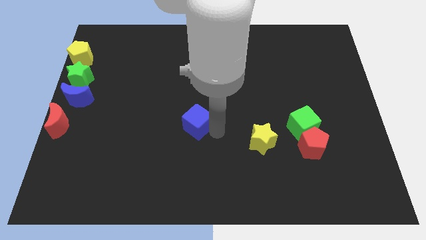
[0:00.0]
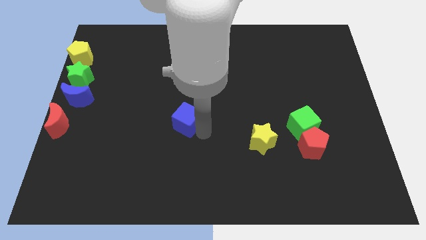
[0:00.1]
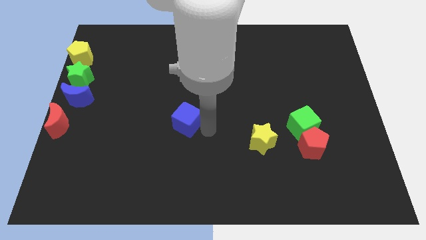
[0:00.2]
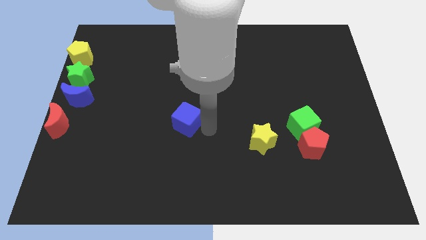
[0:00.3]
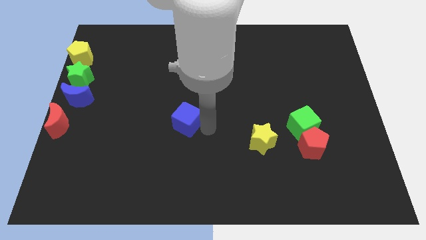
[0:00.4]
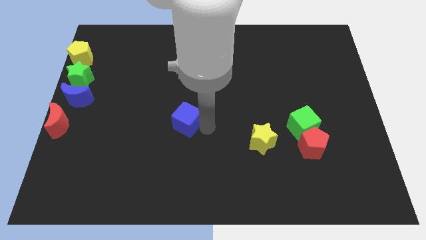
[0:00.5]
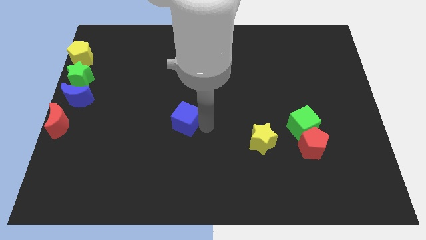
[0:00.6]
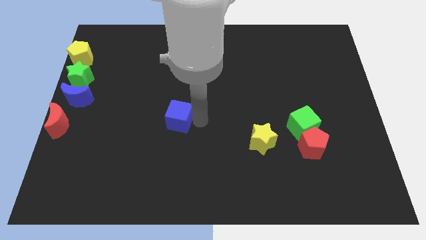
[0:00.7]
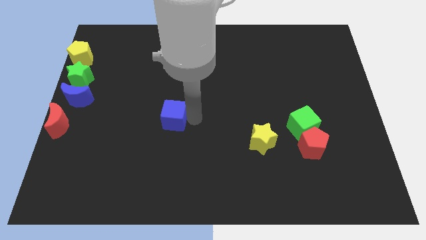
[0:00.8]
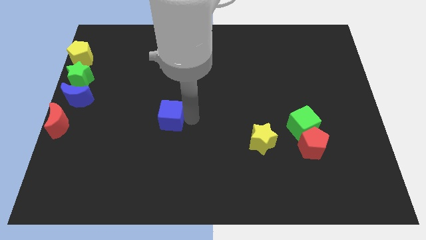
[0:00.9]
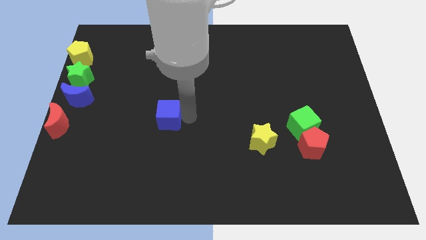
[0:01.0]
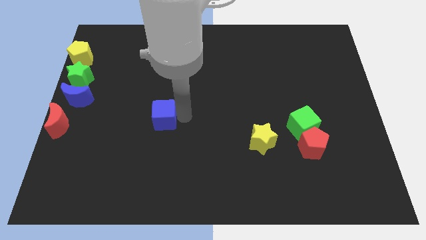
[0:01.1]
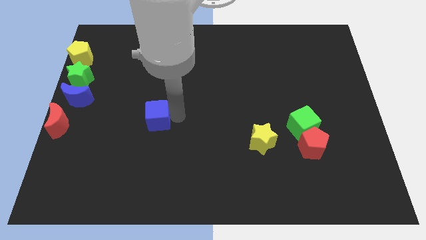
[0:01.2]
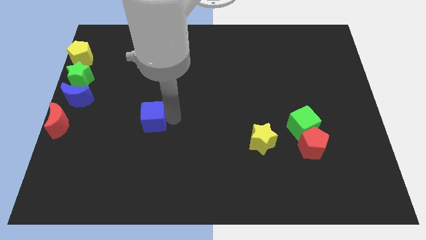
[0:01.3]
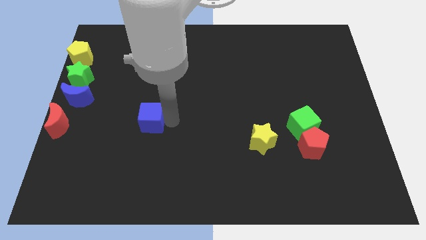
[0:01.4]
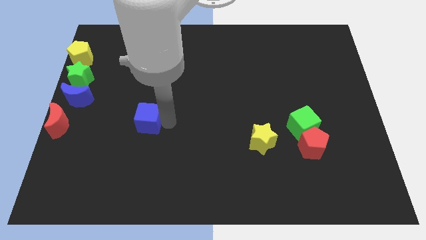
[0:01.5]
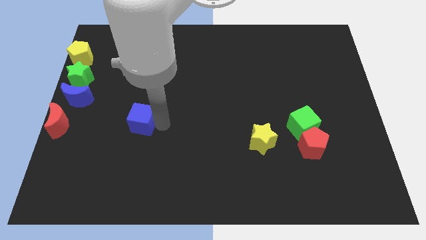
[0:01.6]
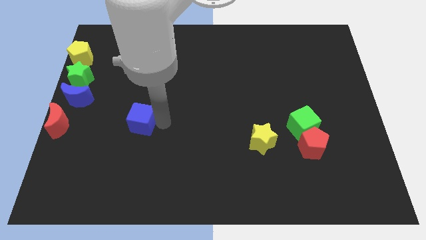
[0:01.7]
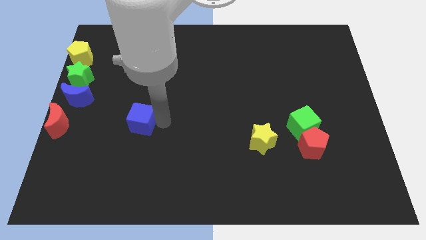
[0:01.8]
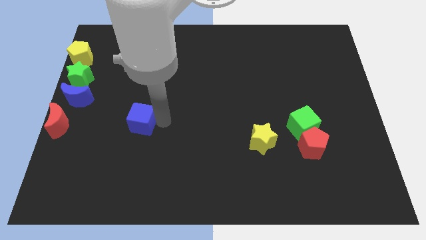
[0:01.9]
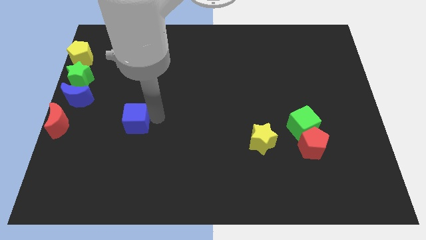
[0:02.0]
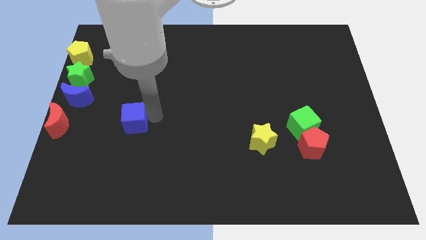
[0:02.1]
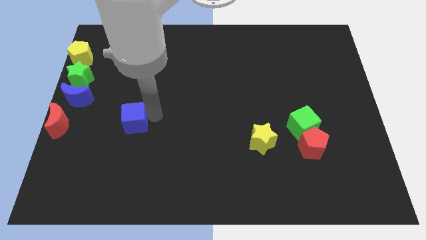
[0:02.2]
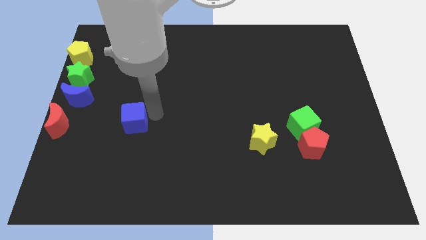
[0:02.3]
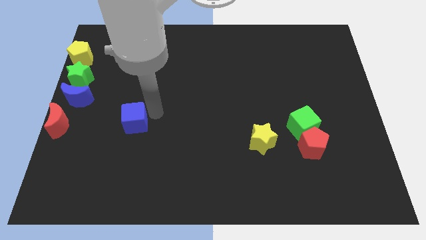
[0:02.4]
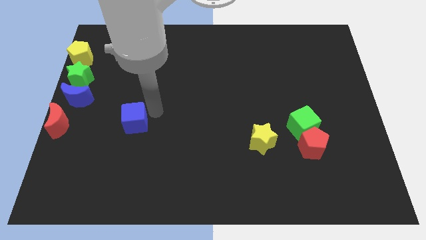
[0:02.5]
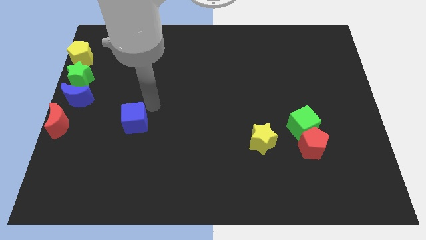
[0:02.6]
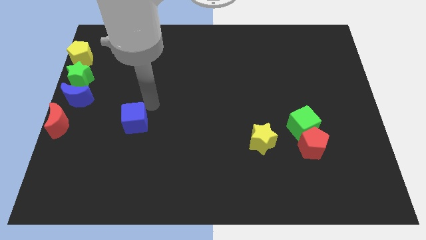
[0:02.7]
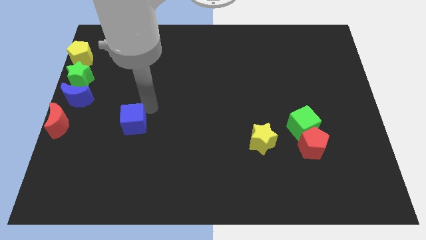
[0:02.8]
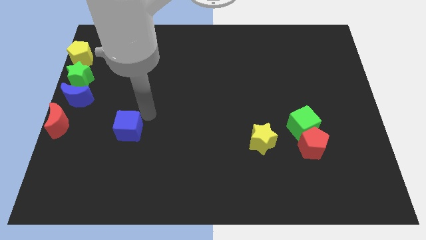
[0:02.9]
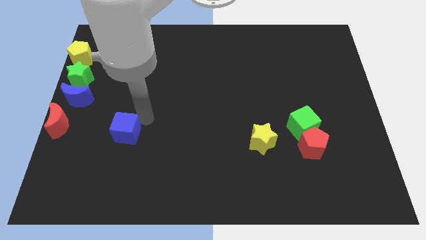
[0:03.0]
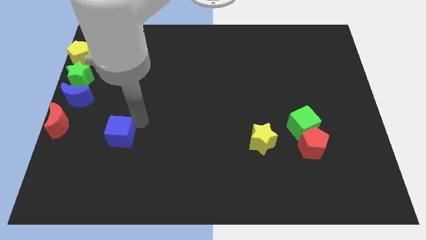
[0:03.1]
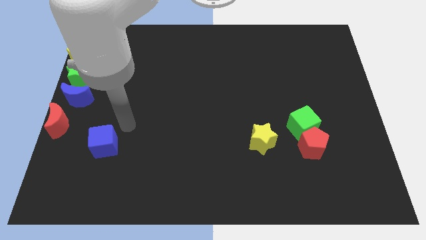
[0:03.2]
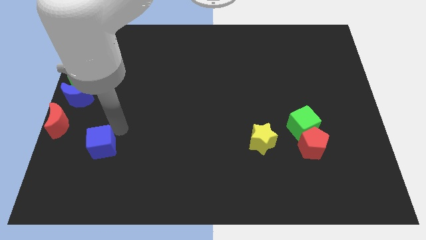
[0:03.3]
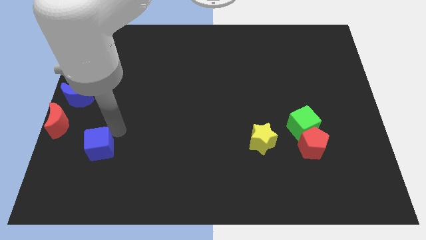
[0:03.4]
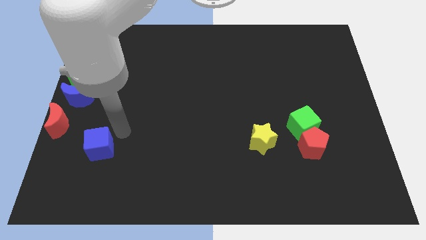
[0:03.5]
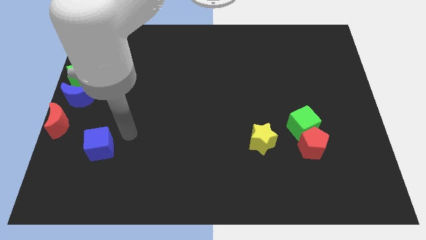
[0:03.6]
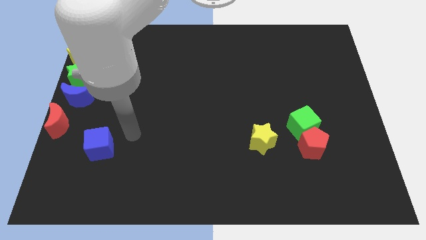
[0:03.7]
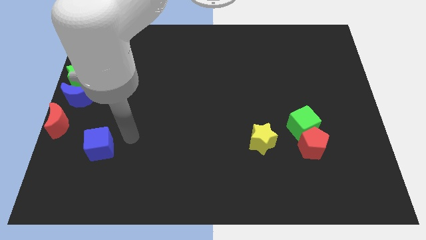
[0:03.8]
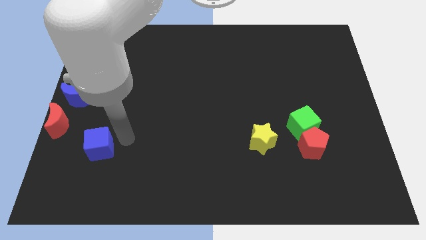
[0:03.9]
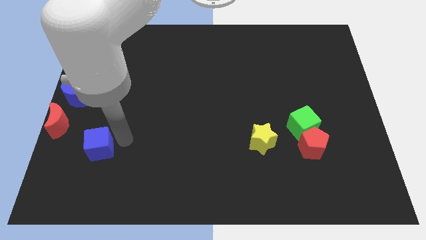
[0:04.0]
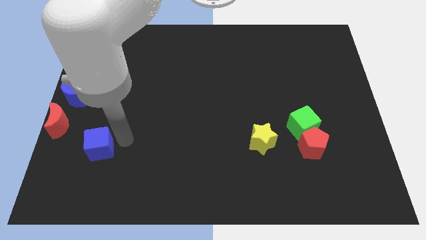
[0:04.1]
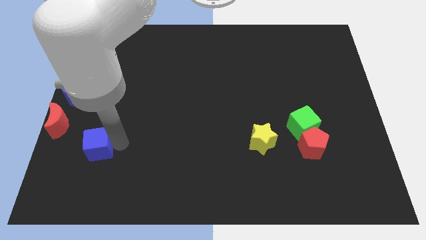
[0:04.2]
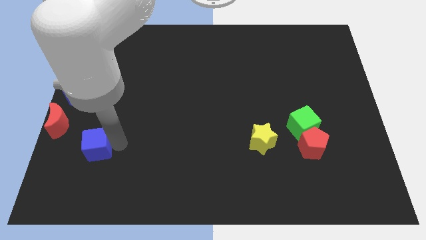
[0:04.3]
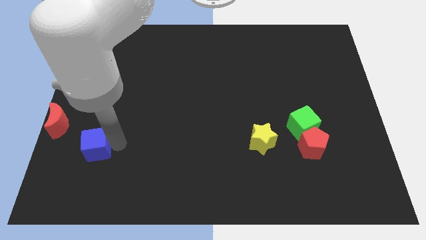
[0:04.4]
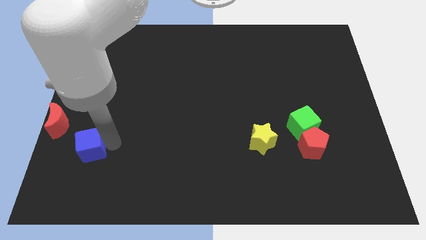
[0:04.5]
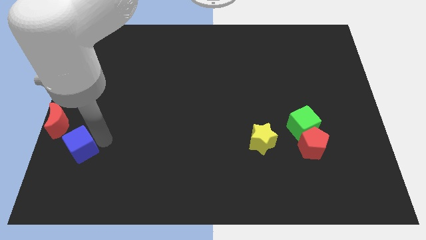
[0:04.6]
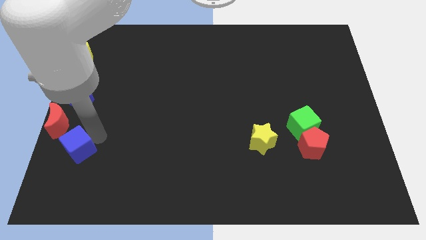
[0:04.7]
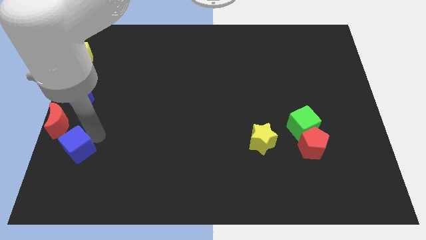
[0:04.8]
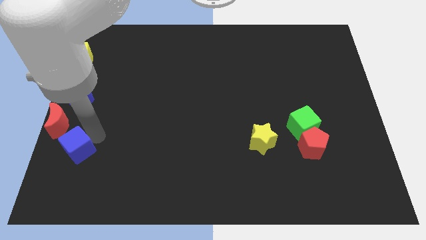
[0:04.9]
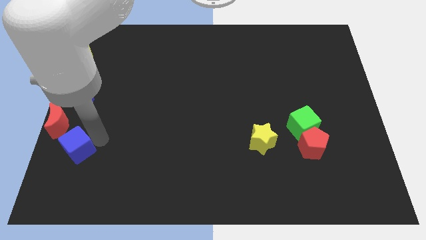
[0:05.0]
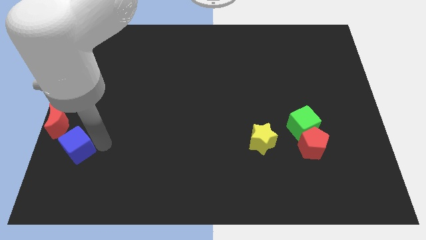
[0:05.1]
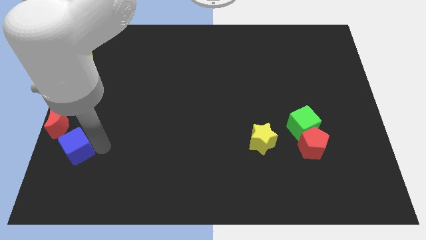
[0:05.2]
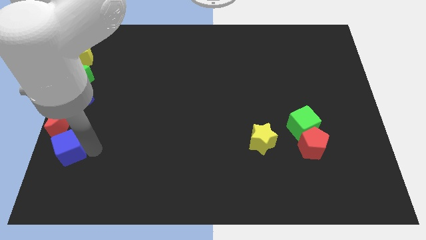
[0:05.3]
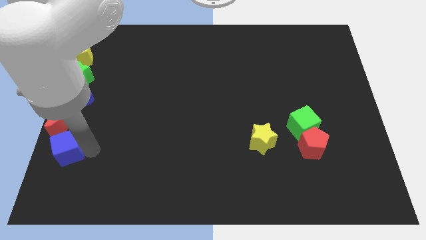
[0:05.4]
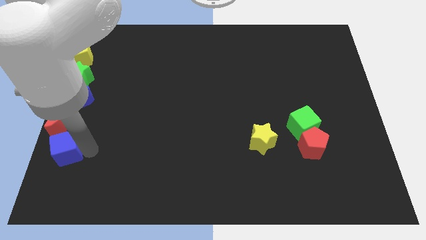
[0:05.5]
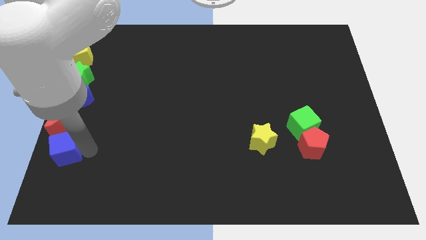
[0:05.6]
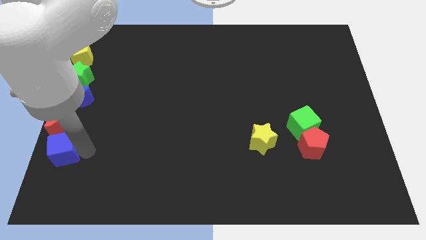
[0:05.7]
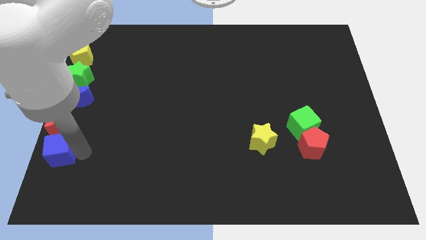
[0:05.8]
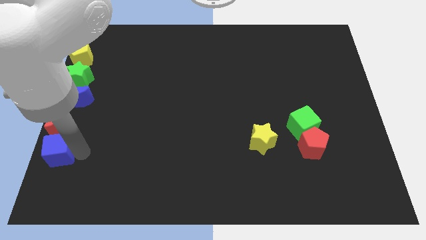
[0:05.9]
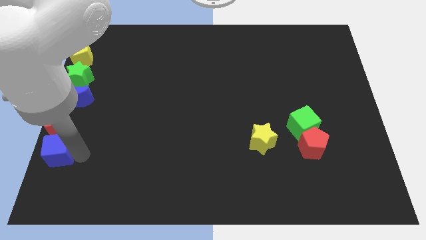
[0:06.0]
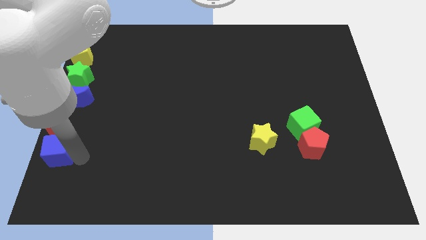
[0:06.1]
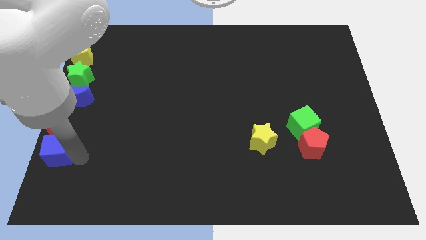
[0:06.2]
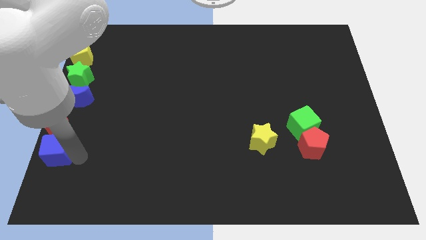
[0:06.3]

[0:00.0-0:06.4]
place the blue cube below the red crescent

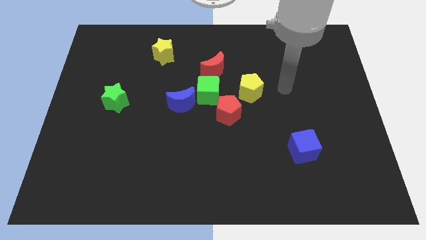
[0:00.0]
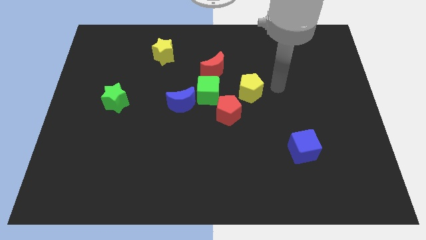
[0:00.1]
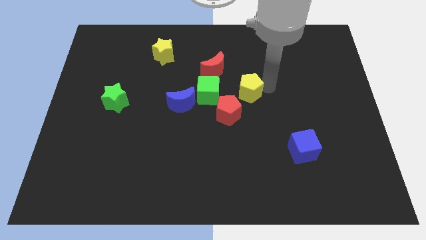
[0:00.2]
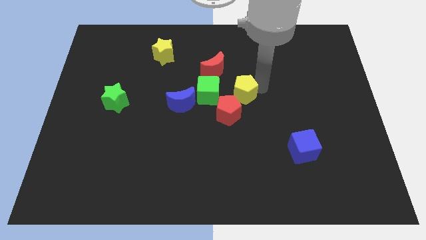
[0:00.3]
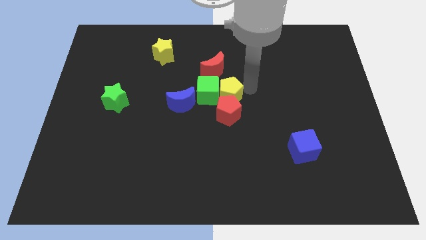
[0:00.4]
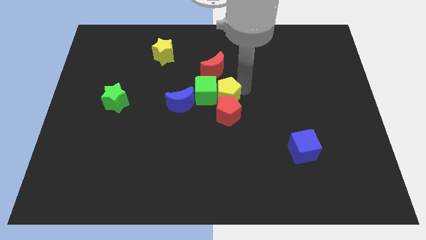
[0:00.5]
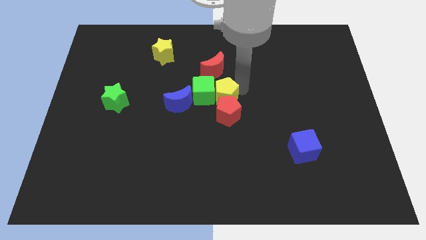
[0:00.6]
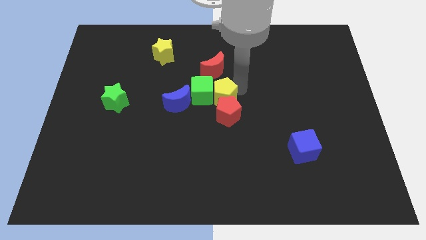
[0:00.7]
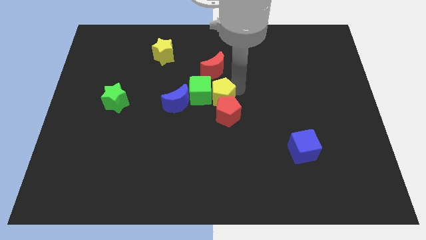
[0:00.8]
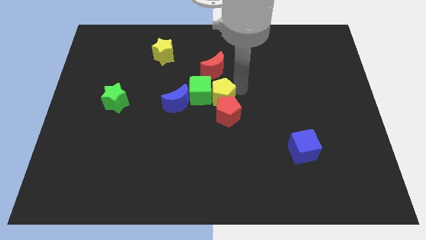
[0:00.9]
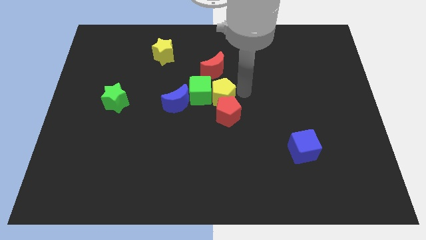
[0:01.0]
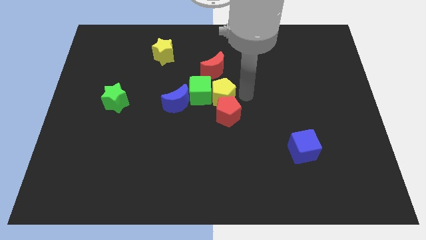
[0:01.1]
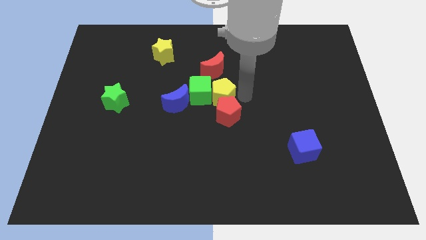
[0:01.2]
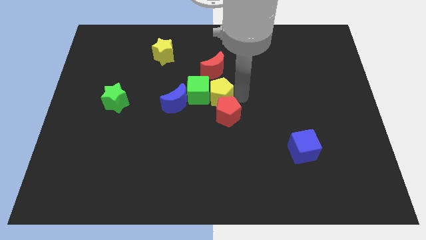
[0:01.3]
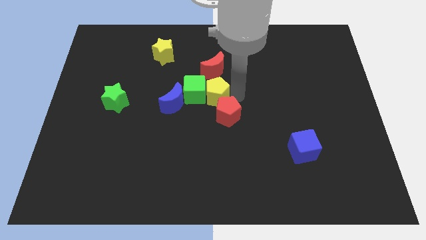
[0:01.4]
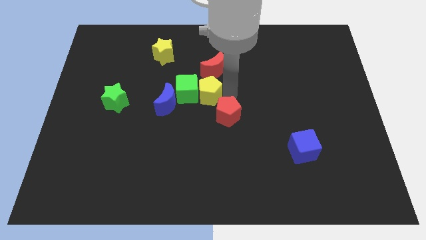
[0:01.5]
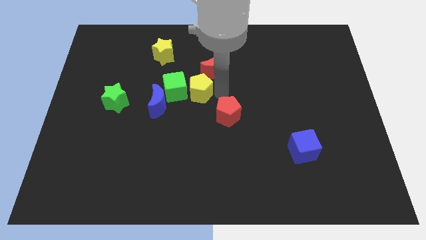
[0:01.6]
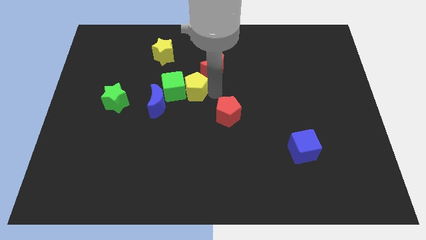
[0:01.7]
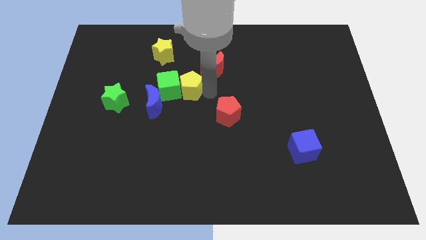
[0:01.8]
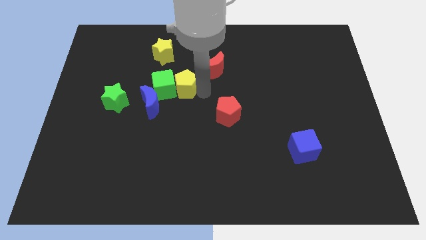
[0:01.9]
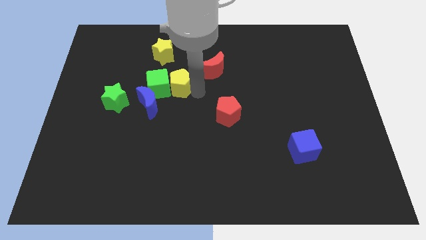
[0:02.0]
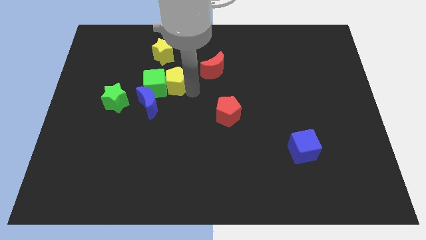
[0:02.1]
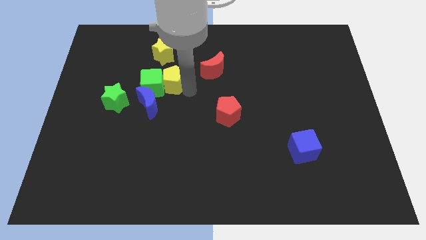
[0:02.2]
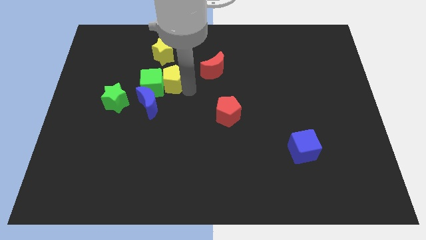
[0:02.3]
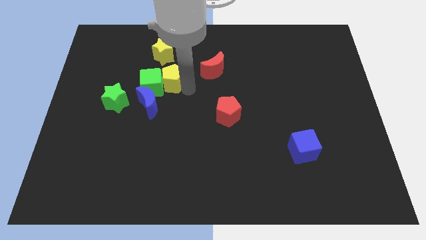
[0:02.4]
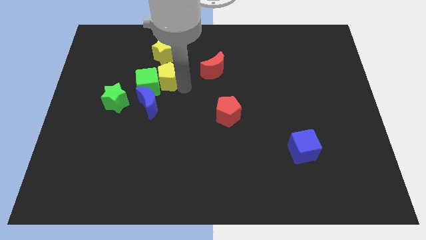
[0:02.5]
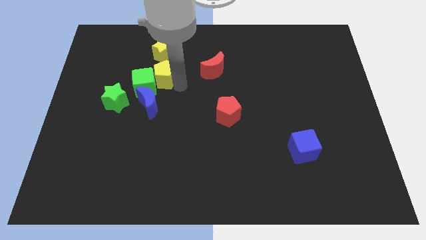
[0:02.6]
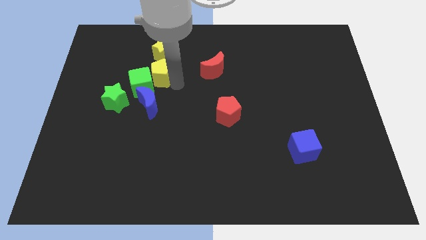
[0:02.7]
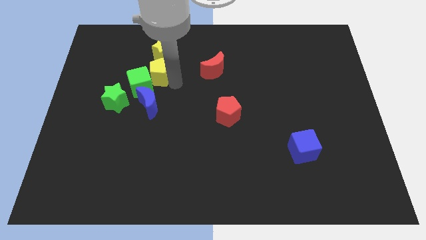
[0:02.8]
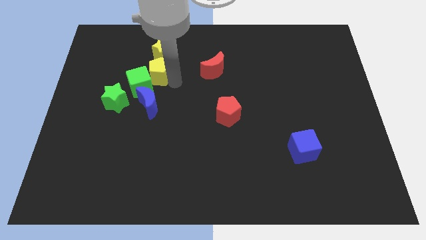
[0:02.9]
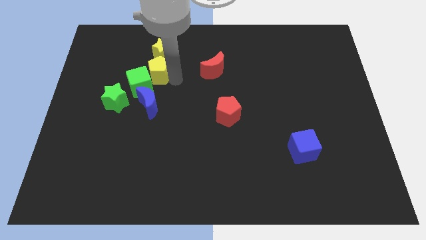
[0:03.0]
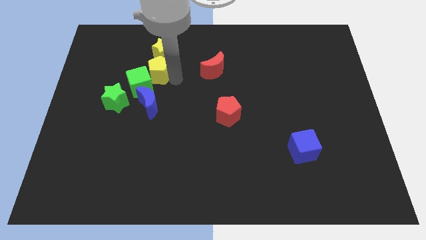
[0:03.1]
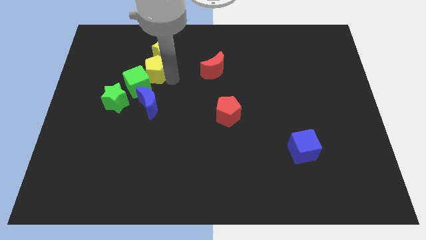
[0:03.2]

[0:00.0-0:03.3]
put the yellow pentagon at the bottom of the yellow star
